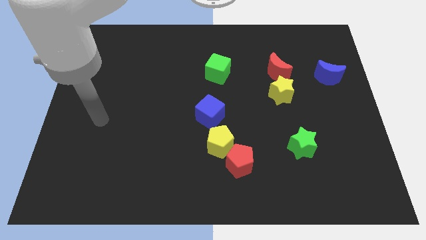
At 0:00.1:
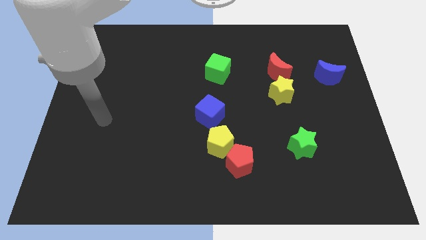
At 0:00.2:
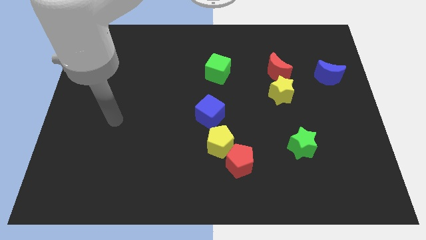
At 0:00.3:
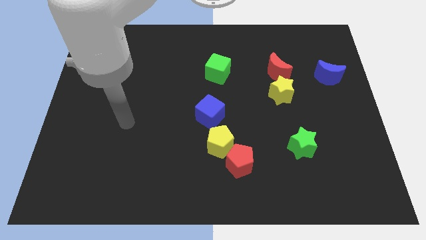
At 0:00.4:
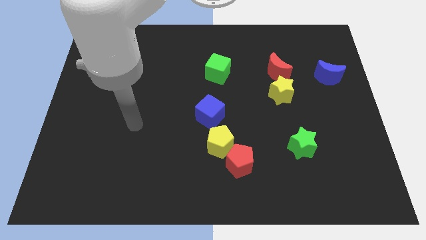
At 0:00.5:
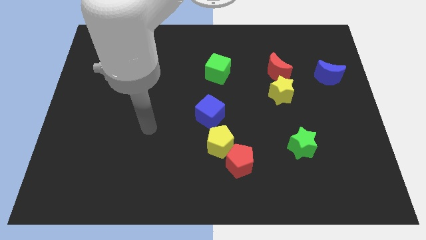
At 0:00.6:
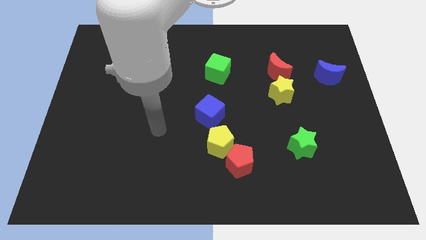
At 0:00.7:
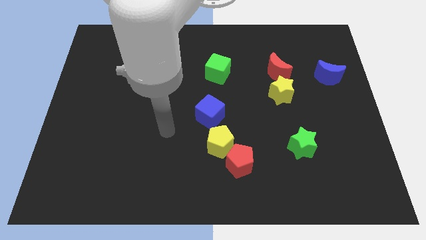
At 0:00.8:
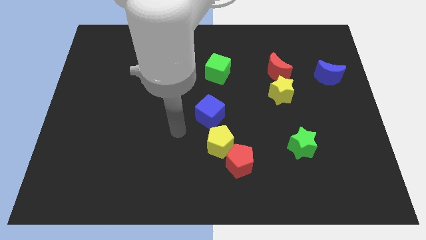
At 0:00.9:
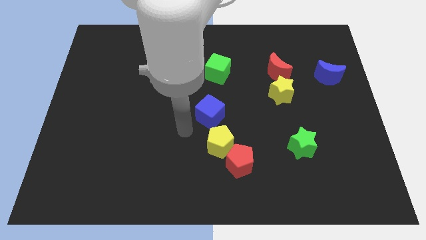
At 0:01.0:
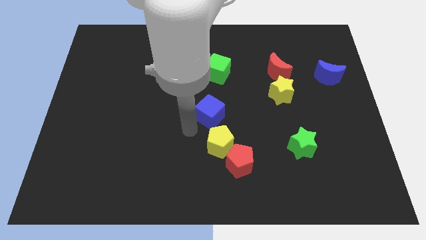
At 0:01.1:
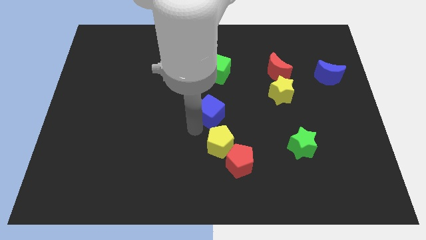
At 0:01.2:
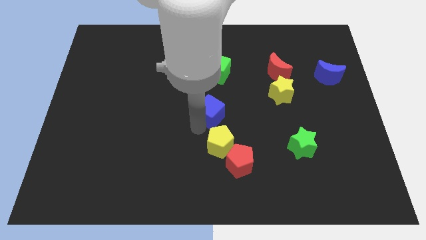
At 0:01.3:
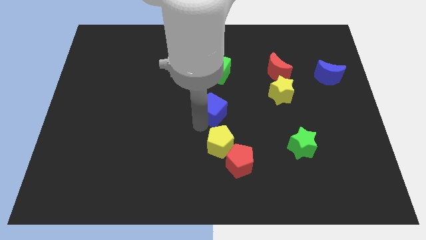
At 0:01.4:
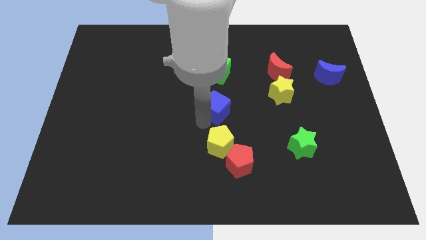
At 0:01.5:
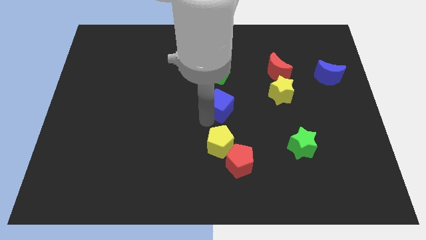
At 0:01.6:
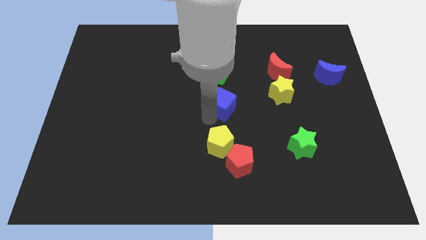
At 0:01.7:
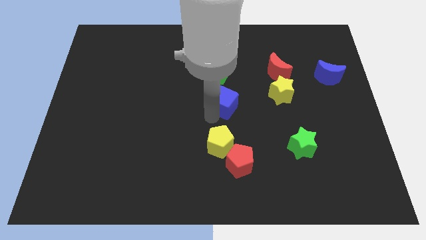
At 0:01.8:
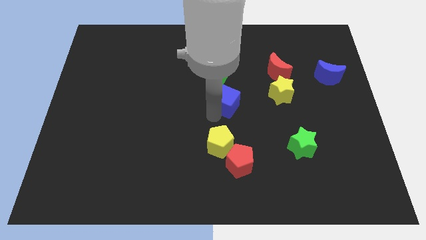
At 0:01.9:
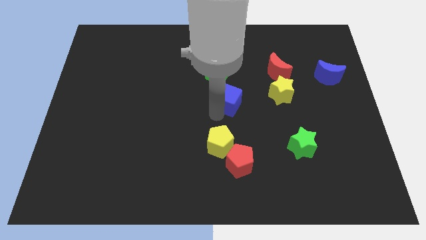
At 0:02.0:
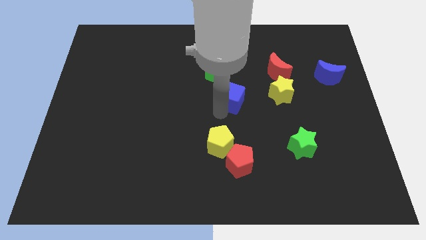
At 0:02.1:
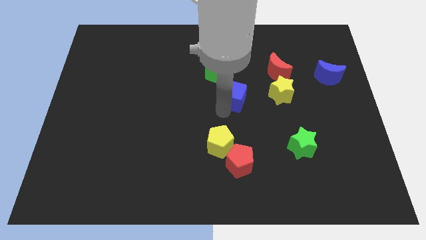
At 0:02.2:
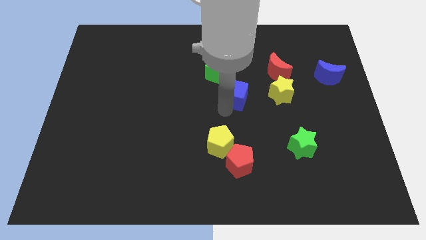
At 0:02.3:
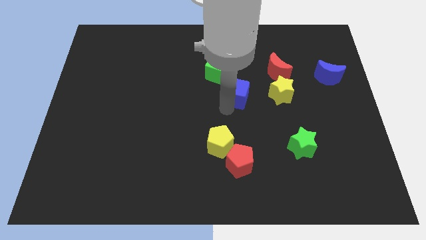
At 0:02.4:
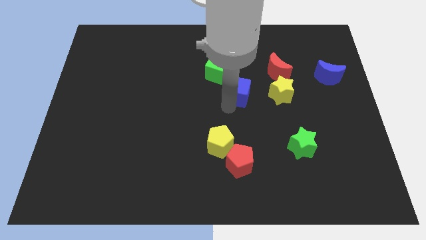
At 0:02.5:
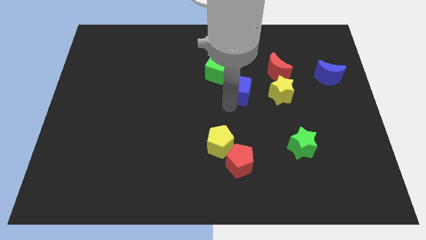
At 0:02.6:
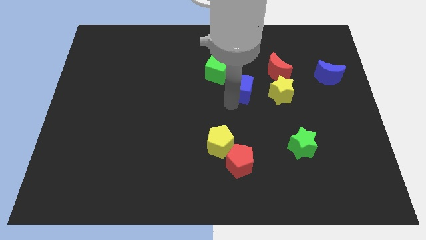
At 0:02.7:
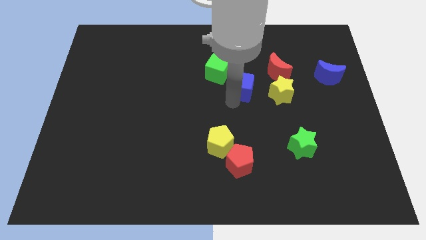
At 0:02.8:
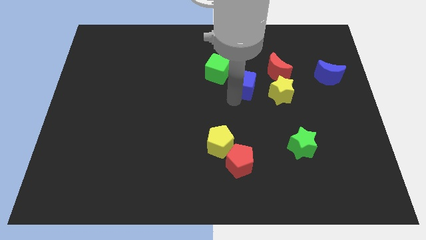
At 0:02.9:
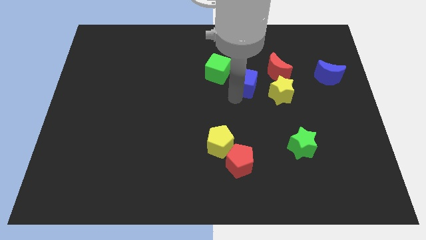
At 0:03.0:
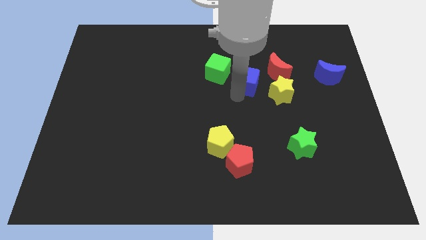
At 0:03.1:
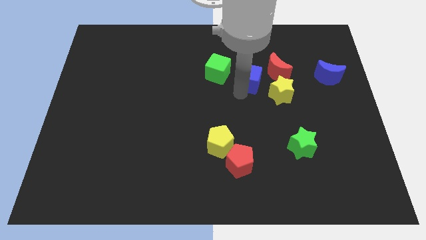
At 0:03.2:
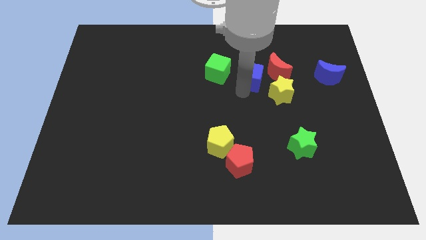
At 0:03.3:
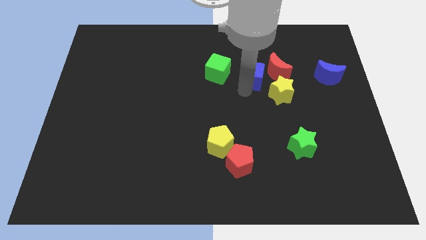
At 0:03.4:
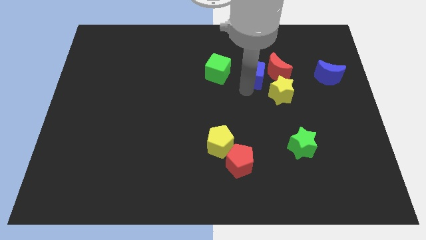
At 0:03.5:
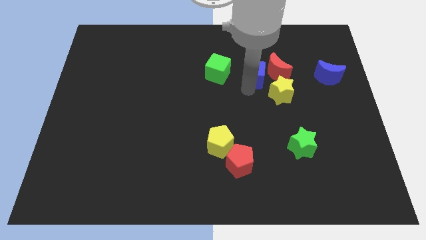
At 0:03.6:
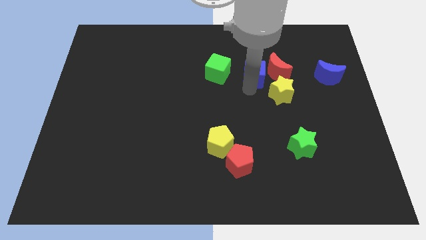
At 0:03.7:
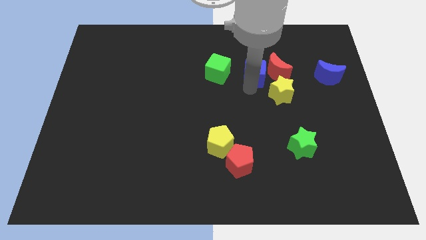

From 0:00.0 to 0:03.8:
push the blue cube close to the red moon

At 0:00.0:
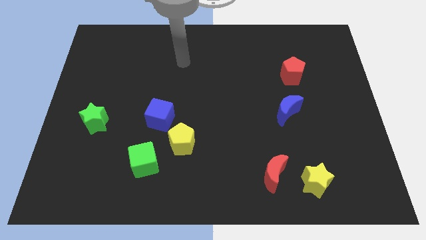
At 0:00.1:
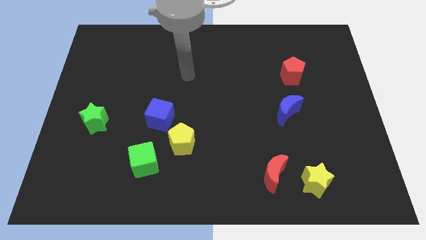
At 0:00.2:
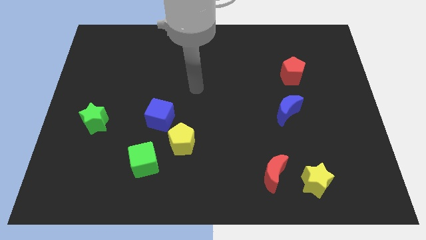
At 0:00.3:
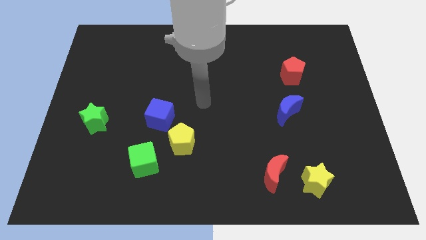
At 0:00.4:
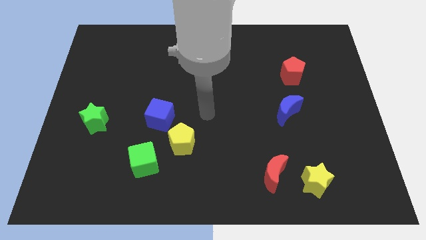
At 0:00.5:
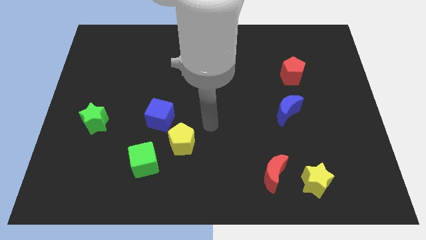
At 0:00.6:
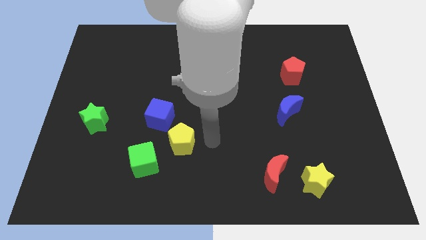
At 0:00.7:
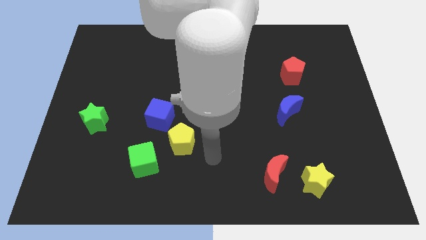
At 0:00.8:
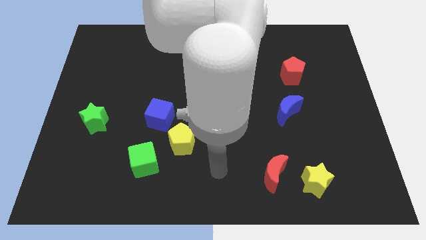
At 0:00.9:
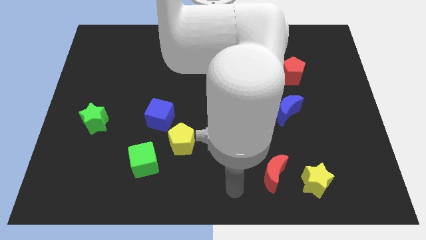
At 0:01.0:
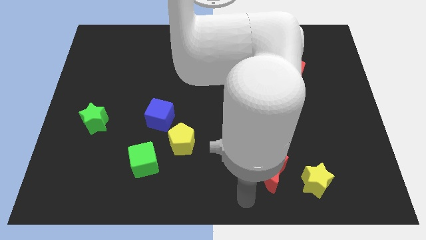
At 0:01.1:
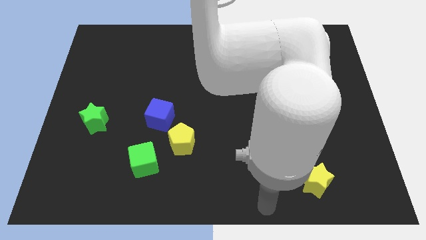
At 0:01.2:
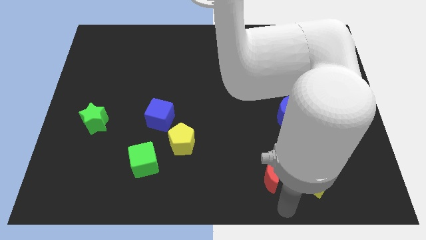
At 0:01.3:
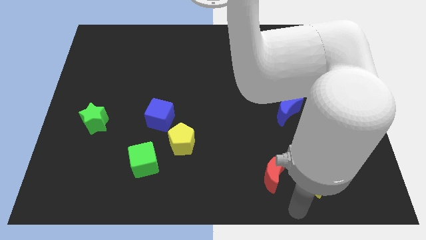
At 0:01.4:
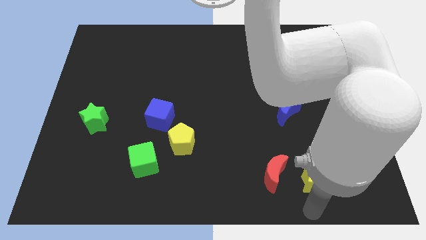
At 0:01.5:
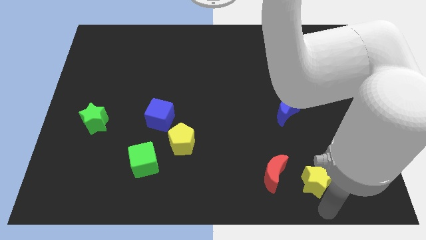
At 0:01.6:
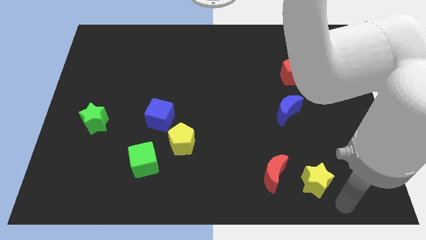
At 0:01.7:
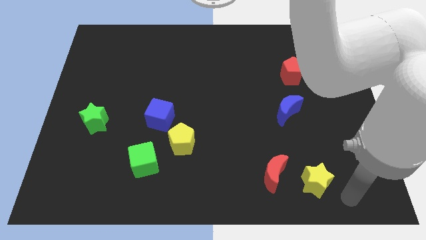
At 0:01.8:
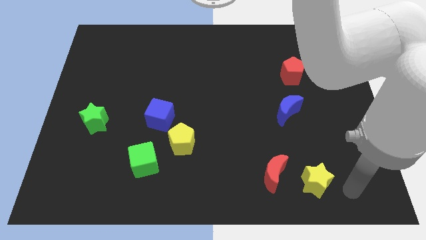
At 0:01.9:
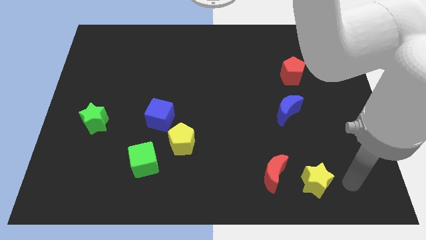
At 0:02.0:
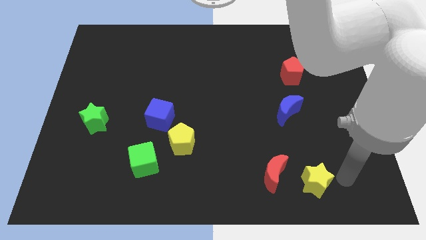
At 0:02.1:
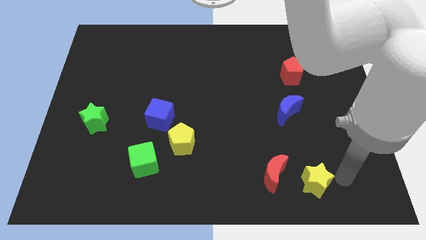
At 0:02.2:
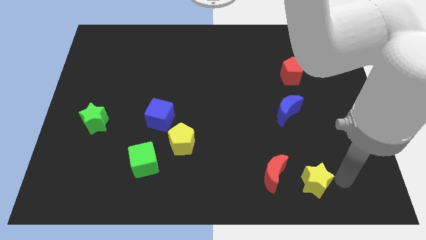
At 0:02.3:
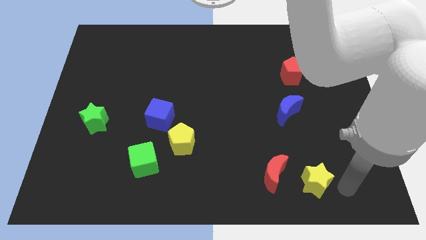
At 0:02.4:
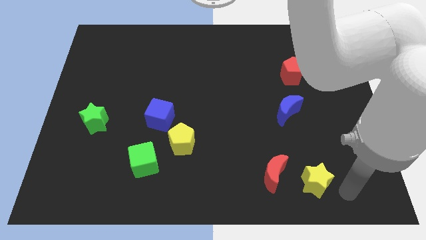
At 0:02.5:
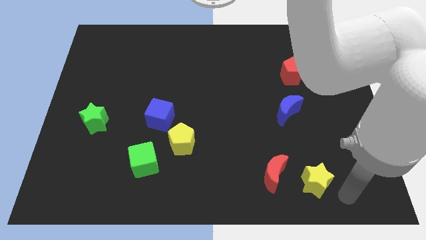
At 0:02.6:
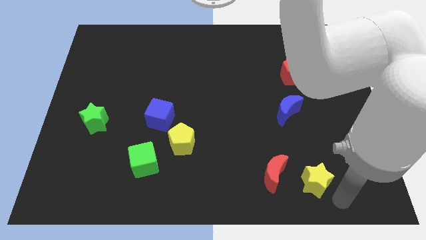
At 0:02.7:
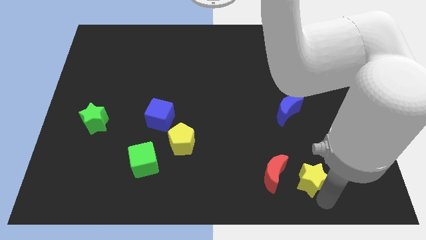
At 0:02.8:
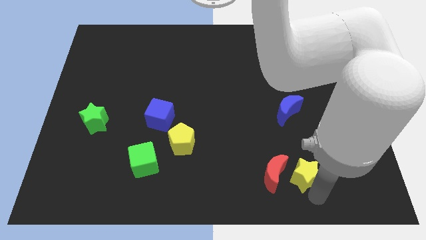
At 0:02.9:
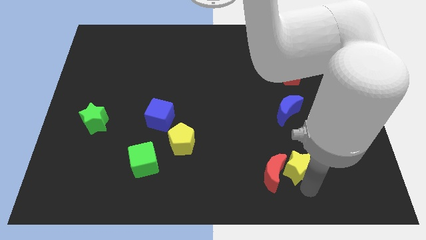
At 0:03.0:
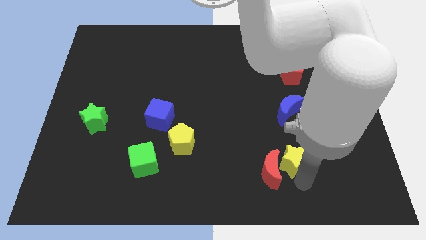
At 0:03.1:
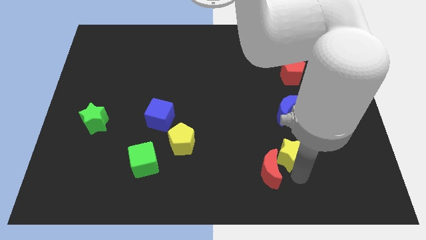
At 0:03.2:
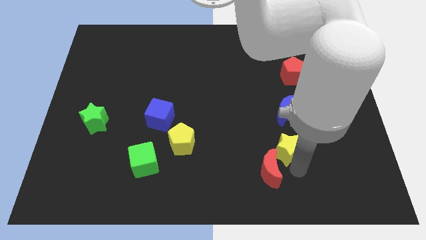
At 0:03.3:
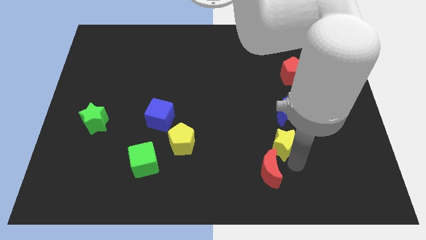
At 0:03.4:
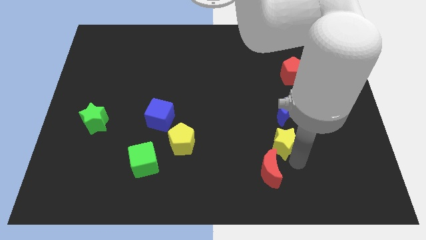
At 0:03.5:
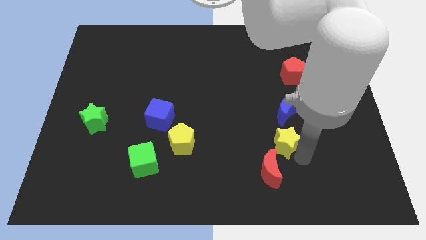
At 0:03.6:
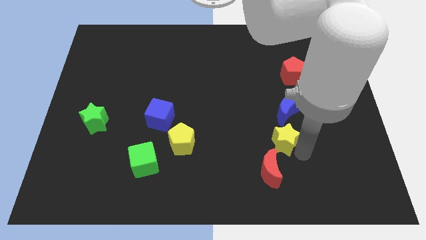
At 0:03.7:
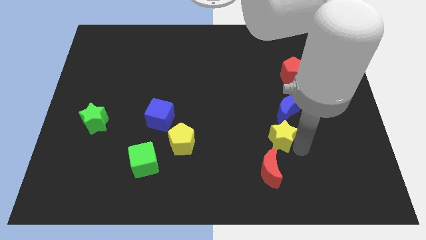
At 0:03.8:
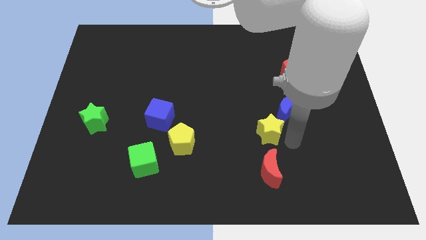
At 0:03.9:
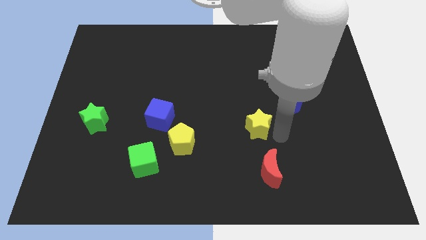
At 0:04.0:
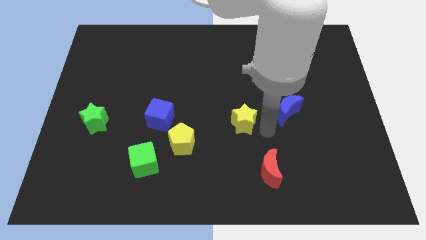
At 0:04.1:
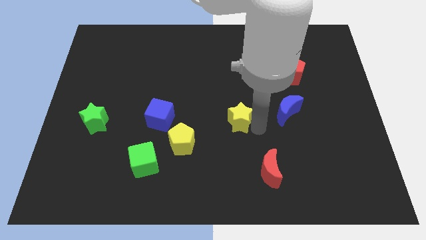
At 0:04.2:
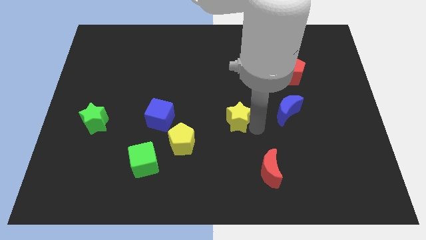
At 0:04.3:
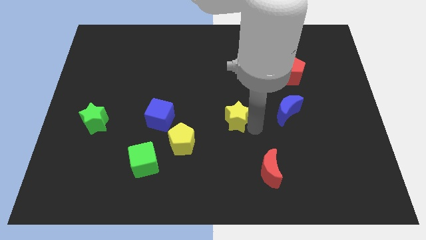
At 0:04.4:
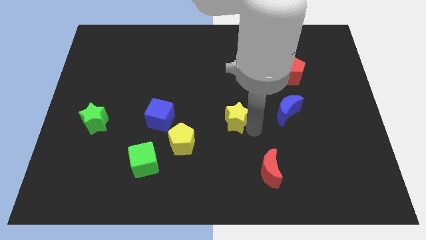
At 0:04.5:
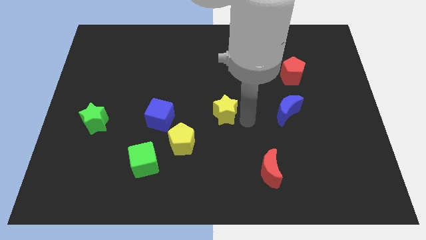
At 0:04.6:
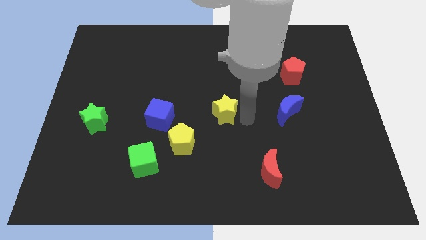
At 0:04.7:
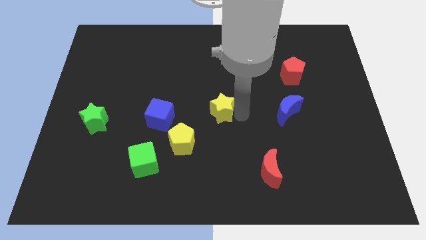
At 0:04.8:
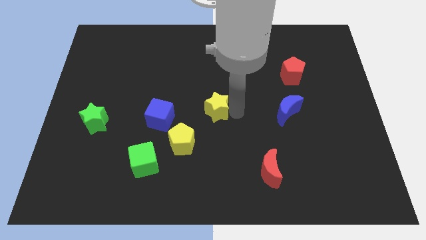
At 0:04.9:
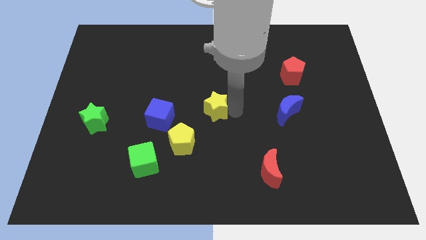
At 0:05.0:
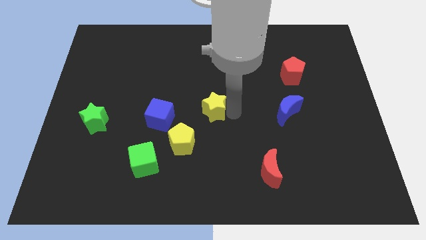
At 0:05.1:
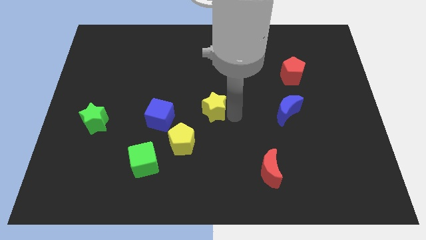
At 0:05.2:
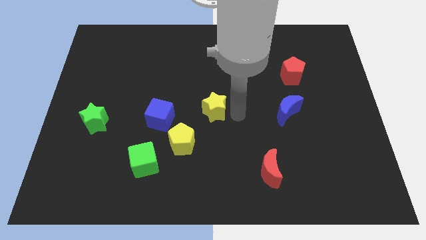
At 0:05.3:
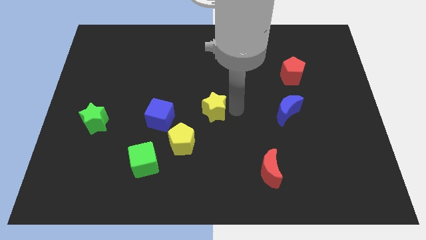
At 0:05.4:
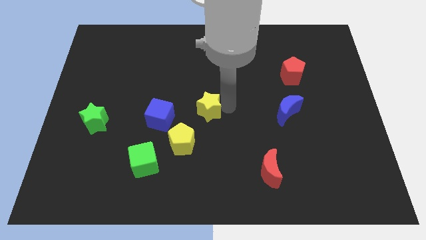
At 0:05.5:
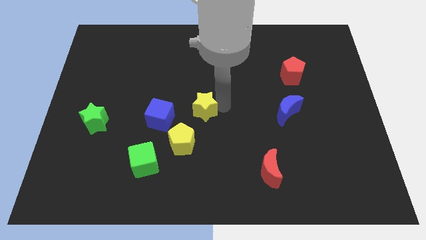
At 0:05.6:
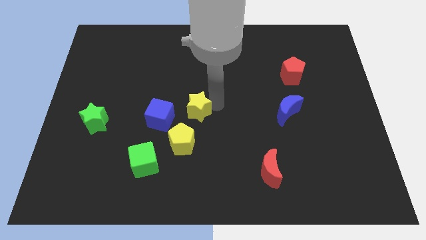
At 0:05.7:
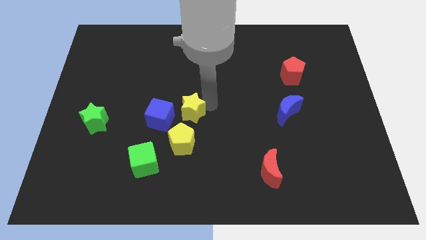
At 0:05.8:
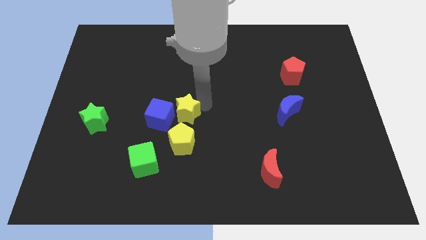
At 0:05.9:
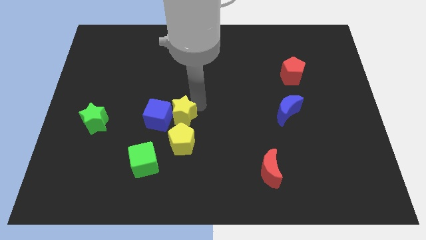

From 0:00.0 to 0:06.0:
slide the yellow star to the blue cube
